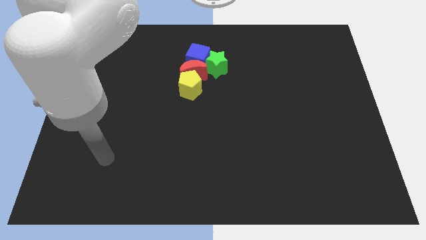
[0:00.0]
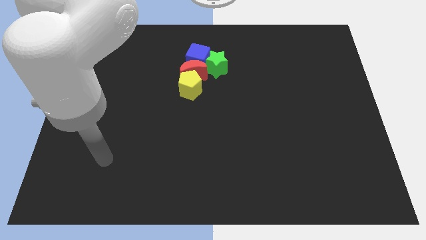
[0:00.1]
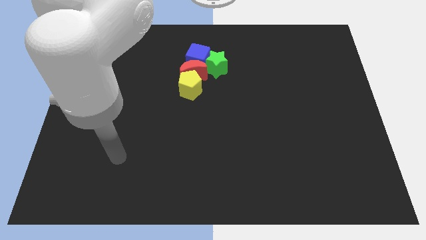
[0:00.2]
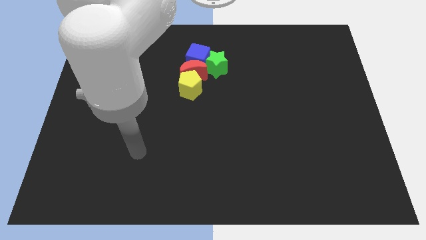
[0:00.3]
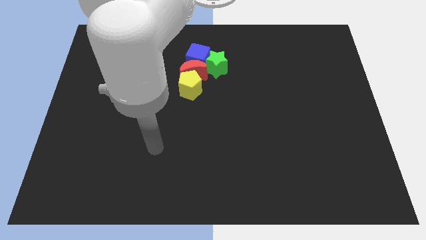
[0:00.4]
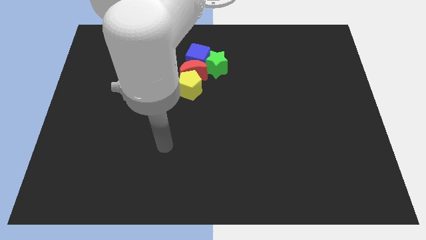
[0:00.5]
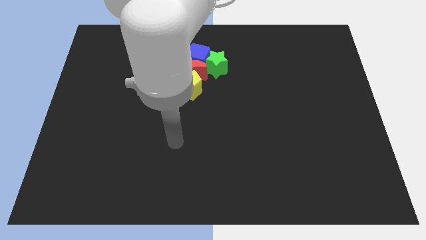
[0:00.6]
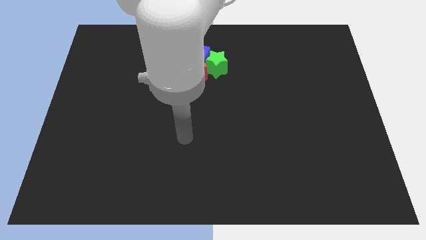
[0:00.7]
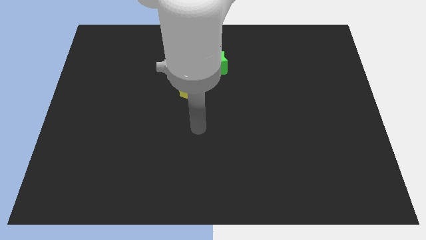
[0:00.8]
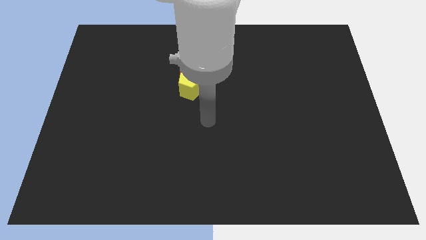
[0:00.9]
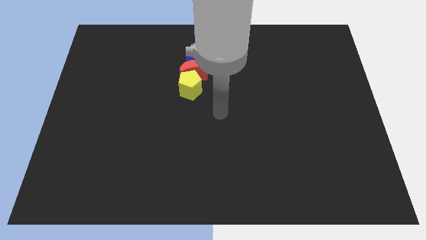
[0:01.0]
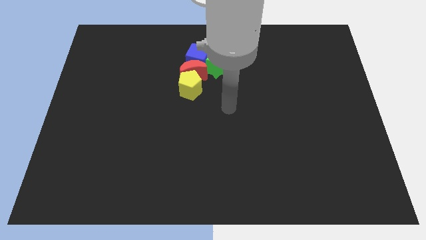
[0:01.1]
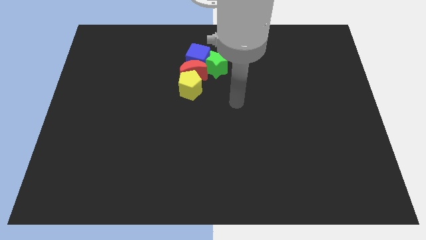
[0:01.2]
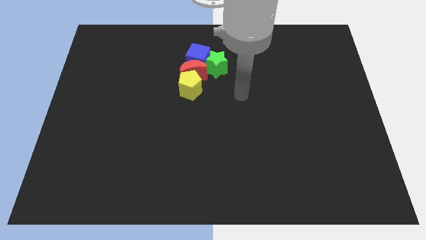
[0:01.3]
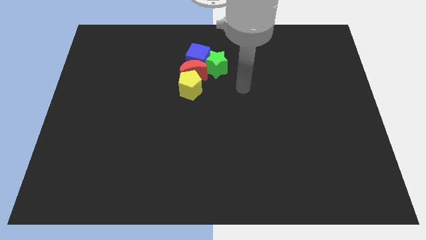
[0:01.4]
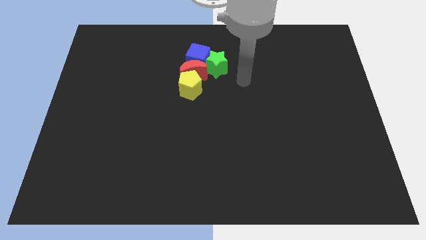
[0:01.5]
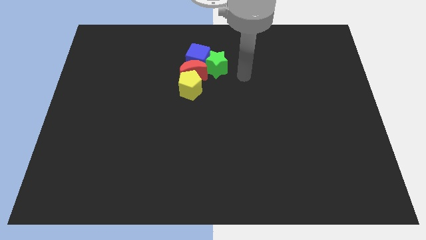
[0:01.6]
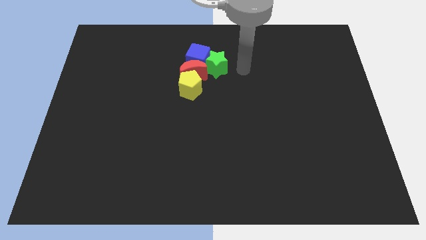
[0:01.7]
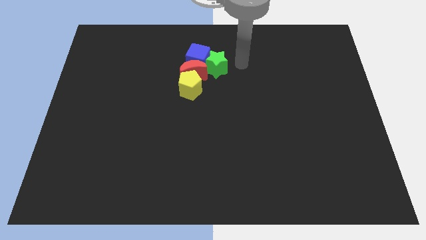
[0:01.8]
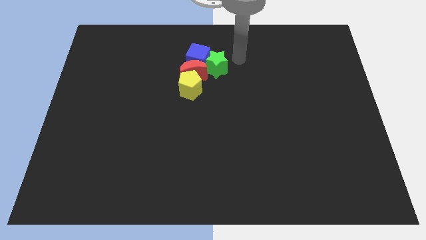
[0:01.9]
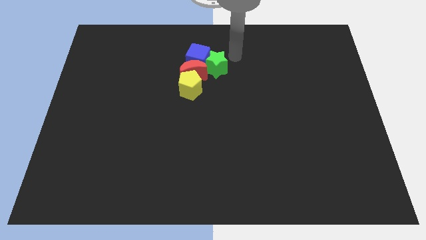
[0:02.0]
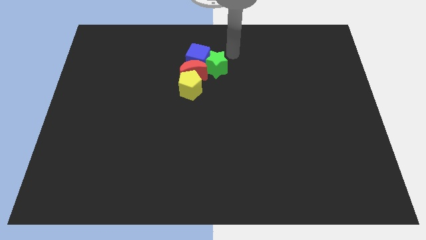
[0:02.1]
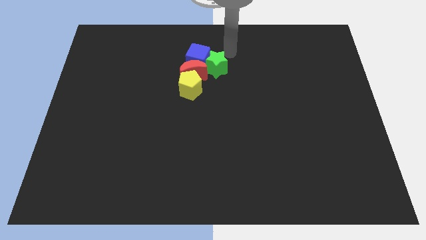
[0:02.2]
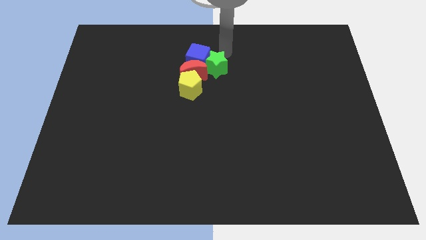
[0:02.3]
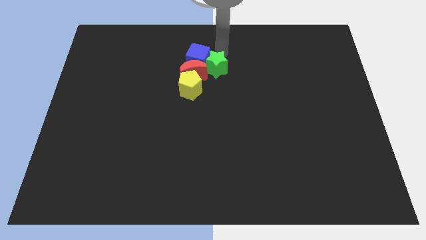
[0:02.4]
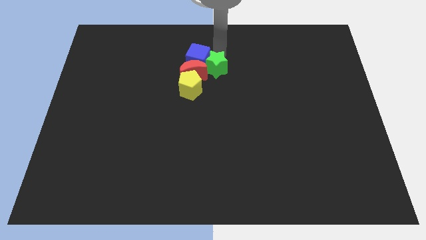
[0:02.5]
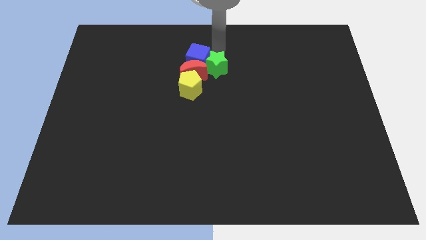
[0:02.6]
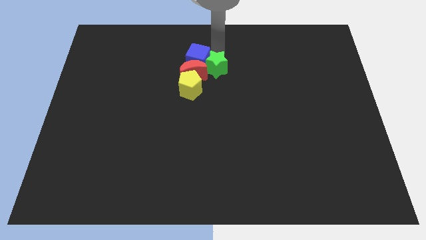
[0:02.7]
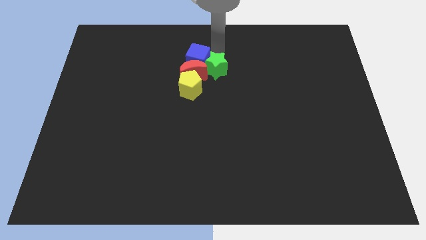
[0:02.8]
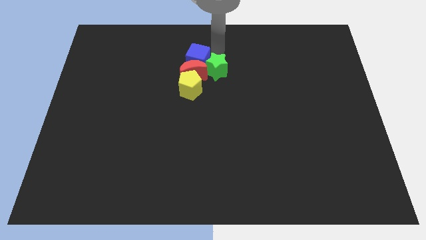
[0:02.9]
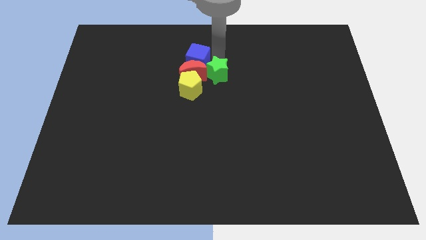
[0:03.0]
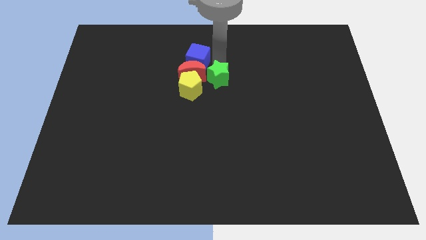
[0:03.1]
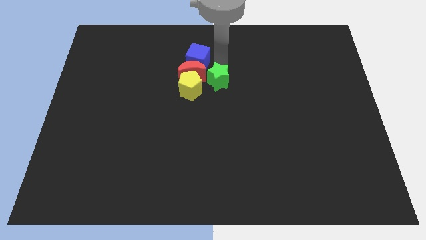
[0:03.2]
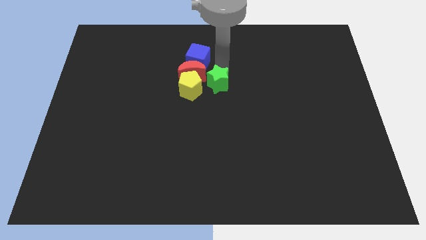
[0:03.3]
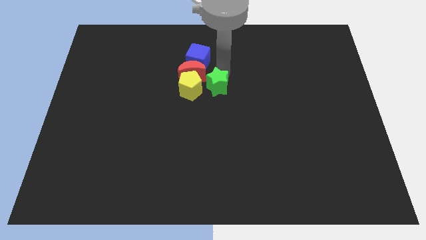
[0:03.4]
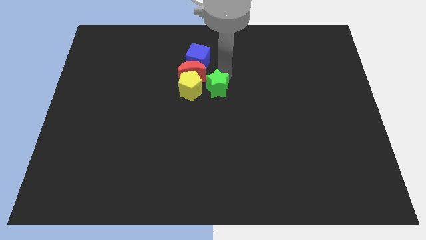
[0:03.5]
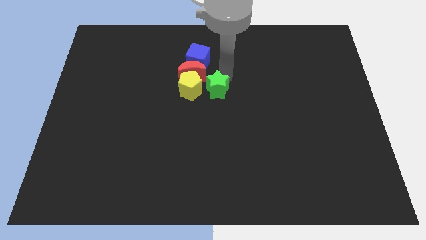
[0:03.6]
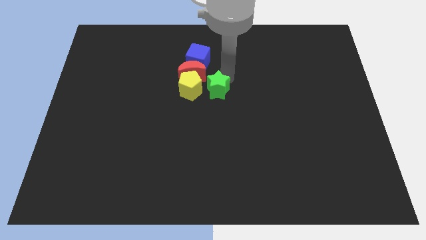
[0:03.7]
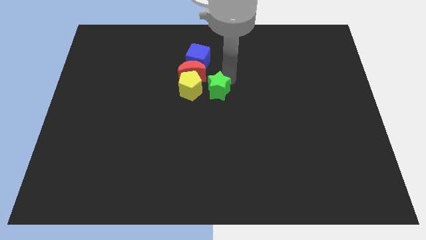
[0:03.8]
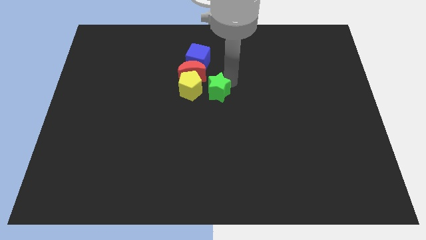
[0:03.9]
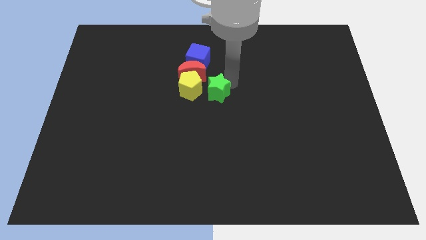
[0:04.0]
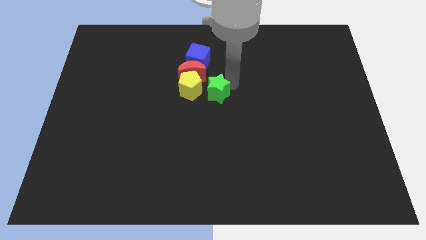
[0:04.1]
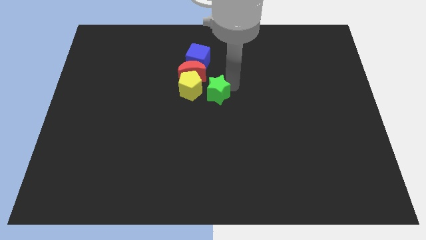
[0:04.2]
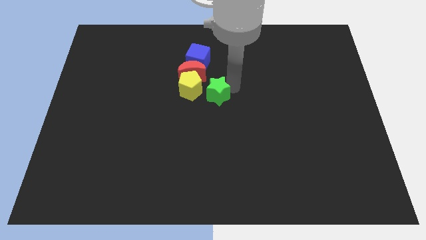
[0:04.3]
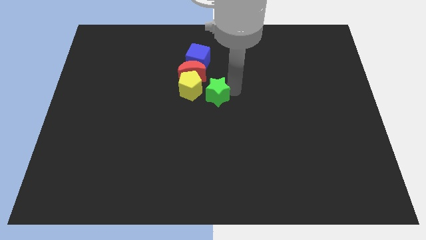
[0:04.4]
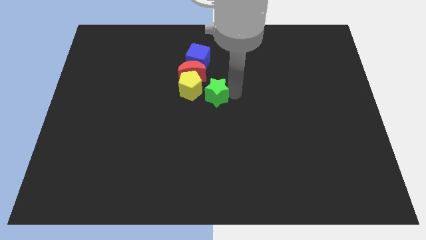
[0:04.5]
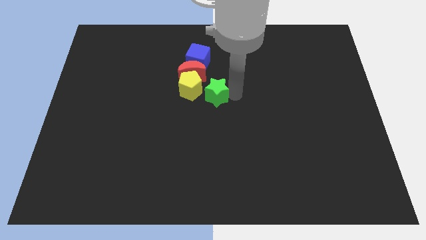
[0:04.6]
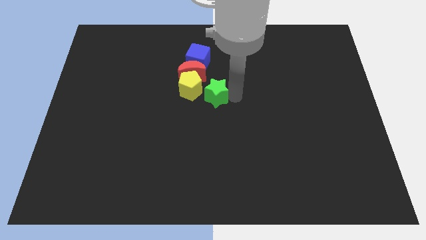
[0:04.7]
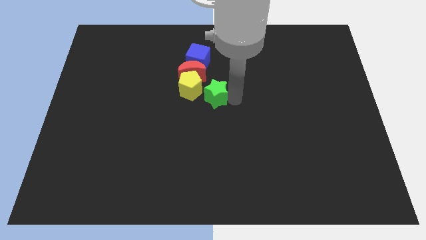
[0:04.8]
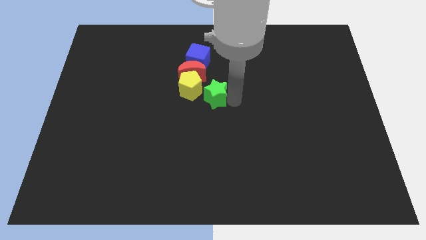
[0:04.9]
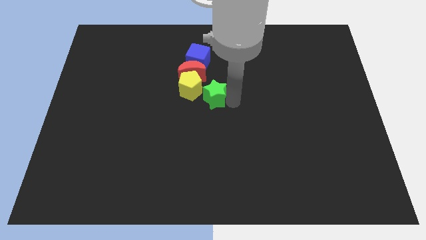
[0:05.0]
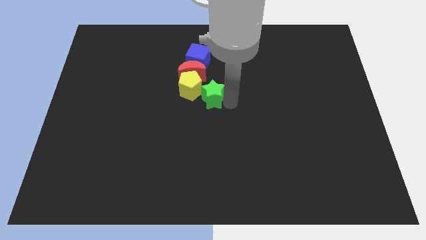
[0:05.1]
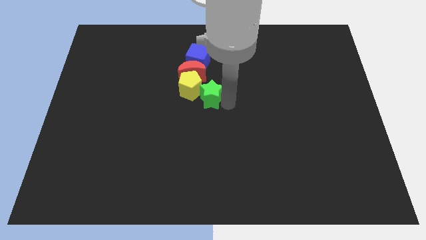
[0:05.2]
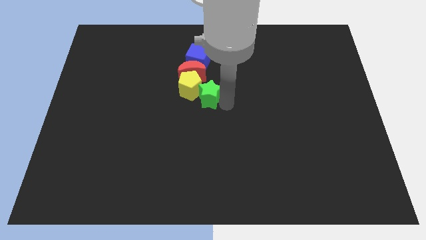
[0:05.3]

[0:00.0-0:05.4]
slide the green star towards the pentagon

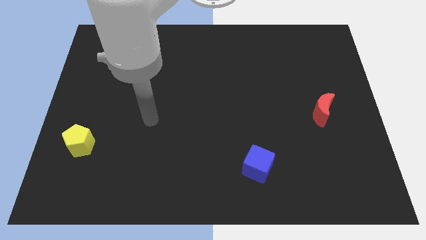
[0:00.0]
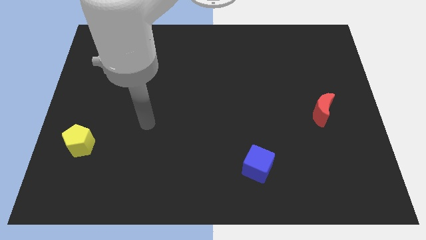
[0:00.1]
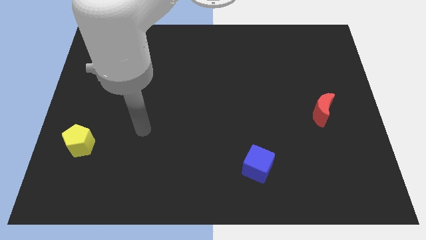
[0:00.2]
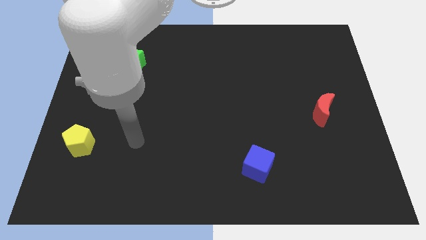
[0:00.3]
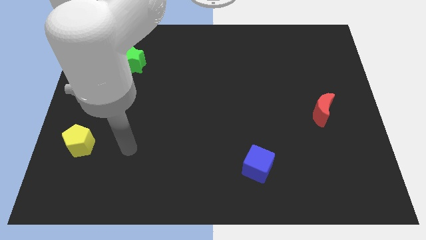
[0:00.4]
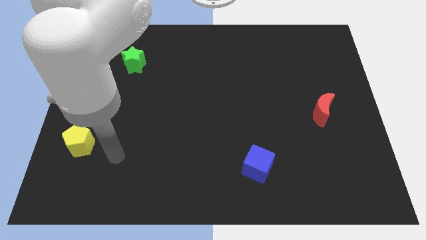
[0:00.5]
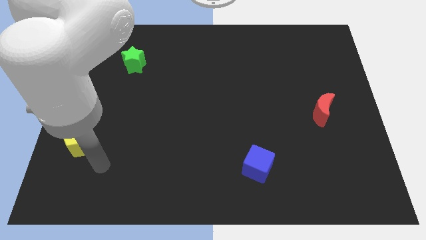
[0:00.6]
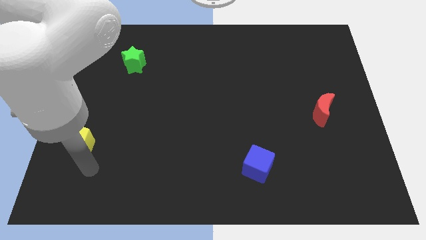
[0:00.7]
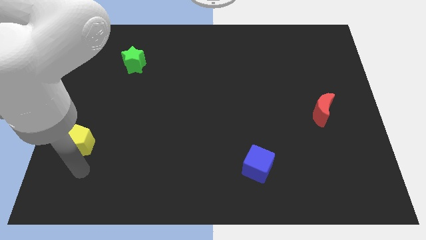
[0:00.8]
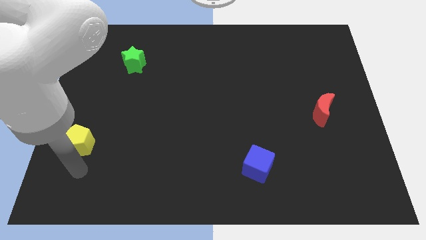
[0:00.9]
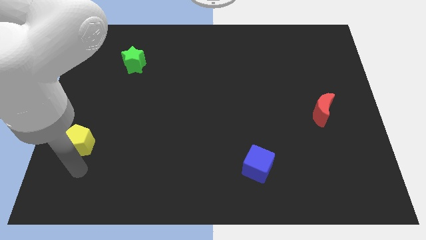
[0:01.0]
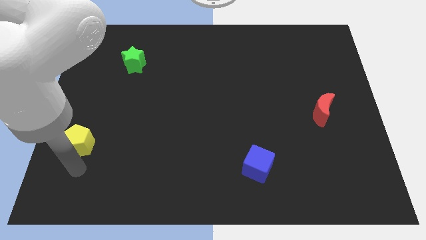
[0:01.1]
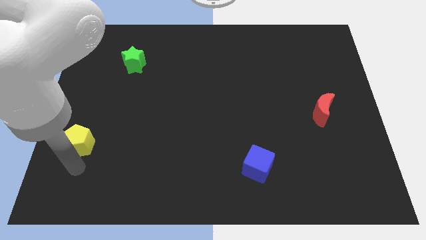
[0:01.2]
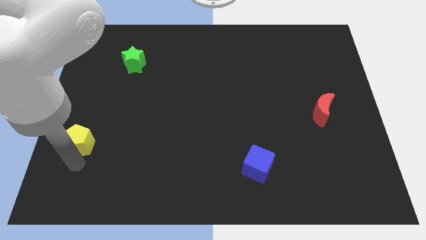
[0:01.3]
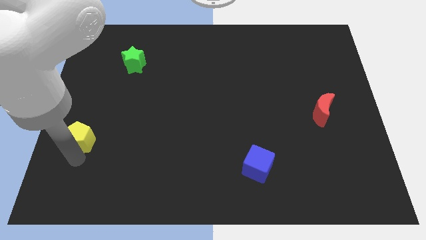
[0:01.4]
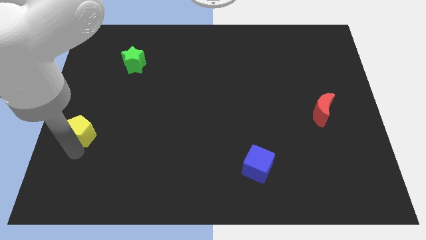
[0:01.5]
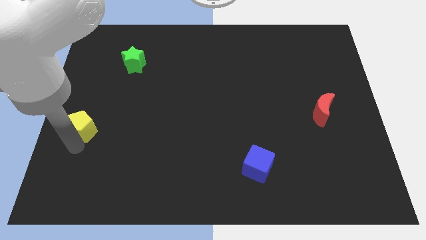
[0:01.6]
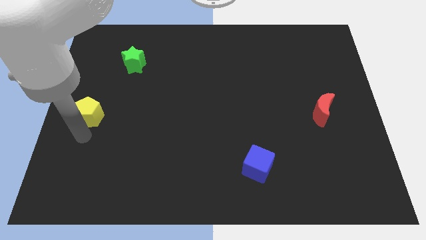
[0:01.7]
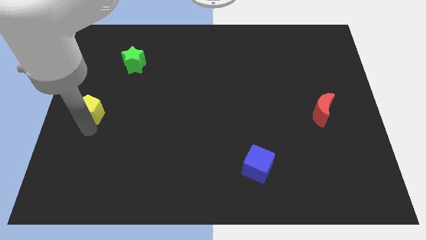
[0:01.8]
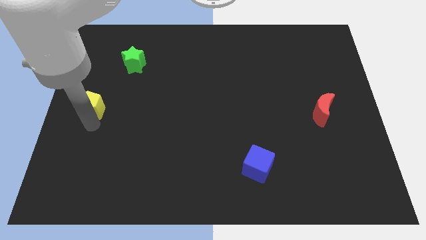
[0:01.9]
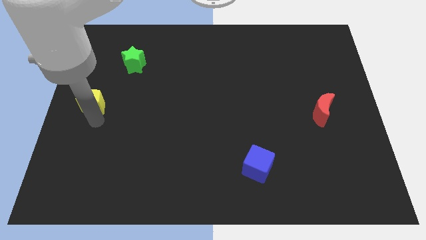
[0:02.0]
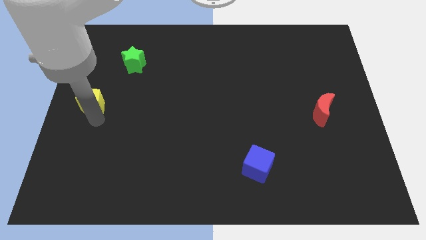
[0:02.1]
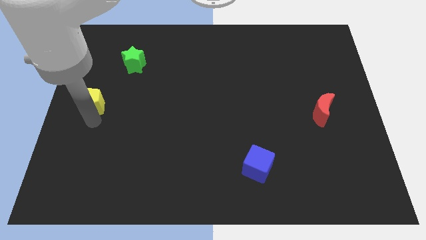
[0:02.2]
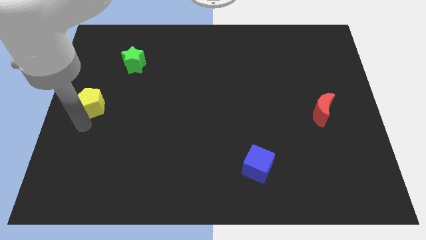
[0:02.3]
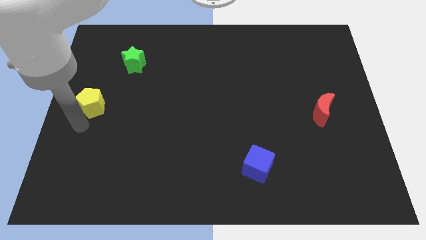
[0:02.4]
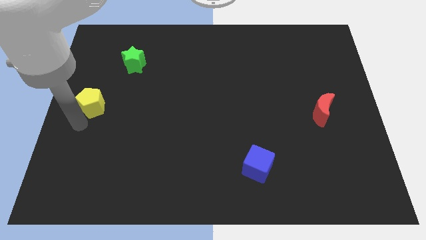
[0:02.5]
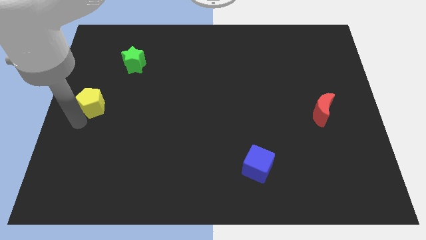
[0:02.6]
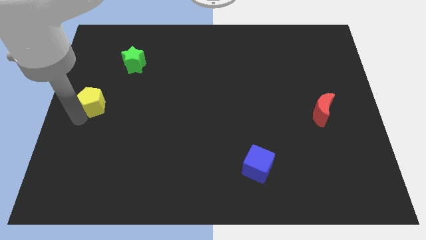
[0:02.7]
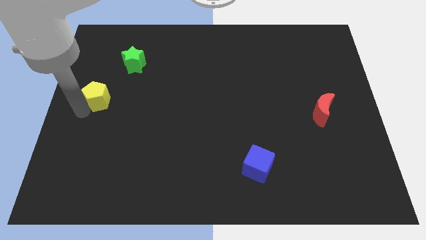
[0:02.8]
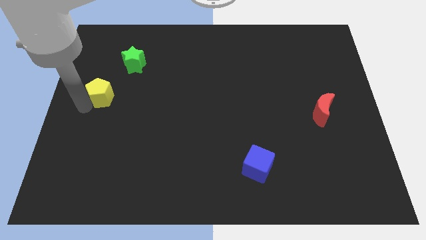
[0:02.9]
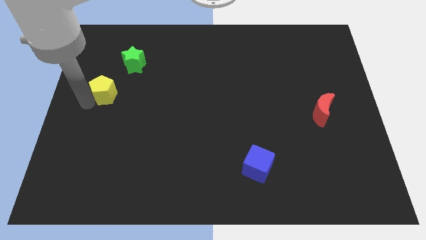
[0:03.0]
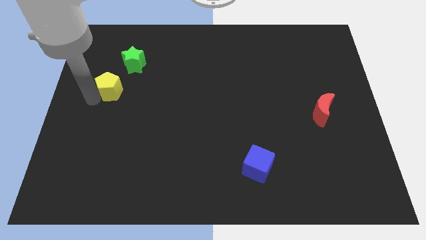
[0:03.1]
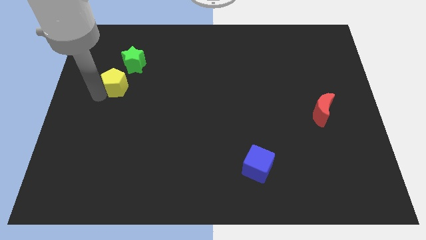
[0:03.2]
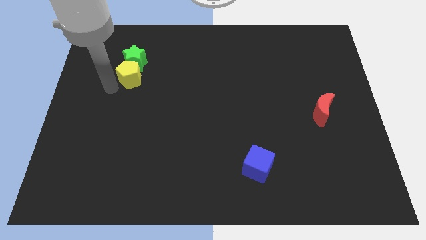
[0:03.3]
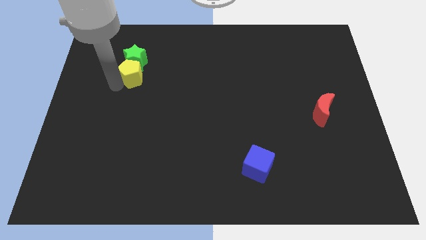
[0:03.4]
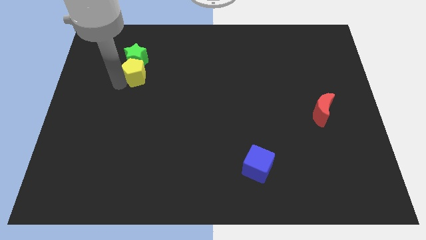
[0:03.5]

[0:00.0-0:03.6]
put the pentagon to the green star
